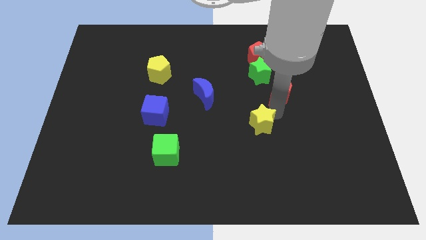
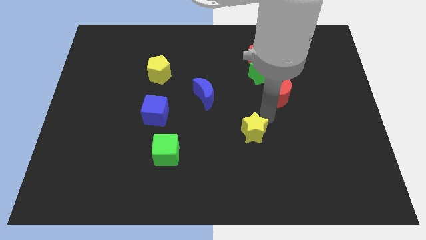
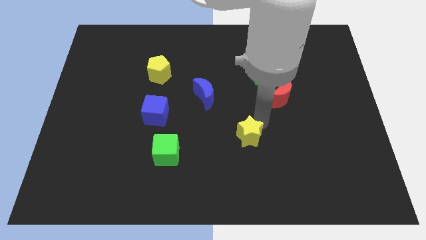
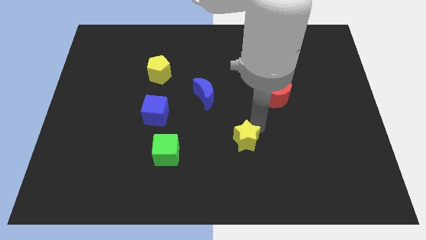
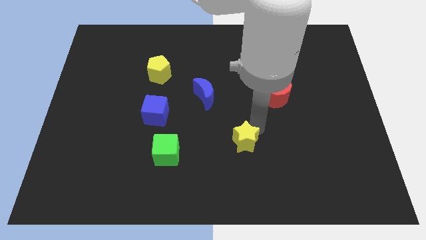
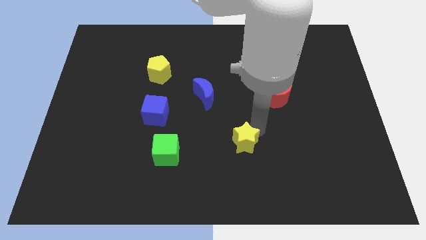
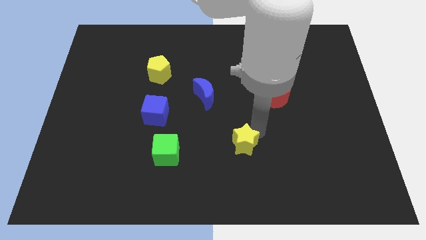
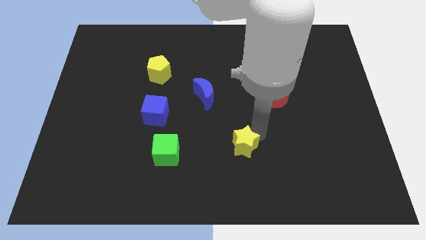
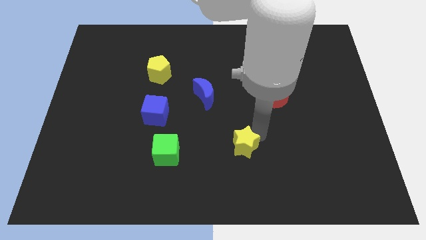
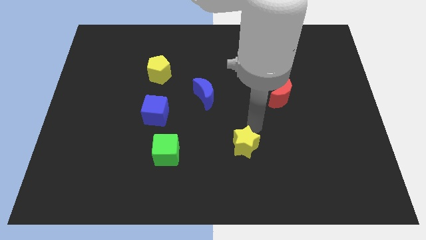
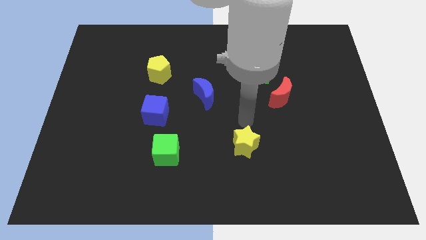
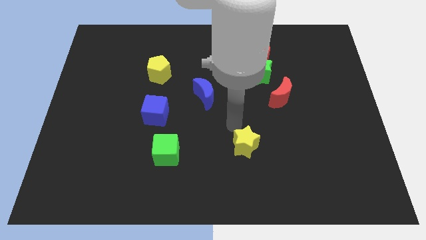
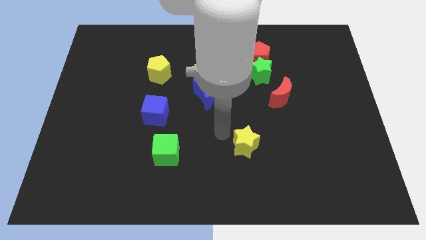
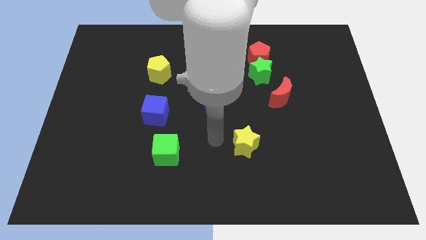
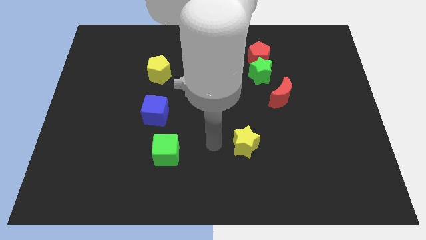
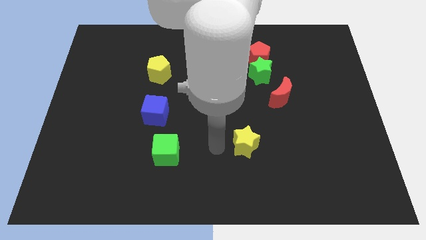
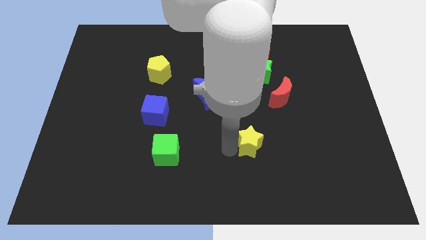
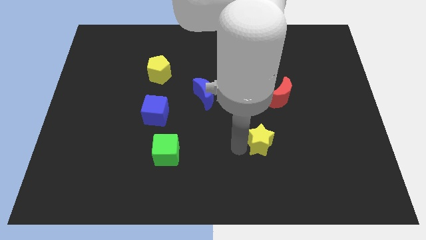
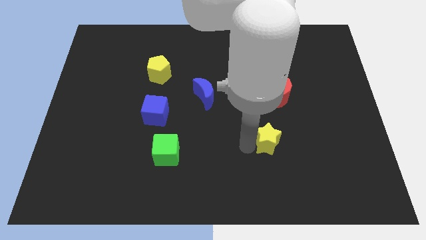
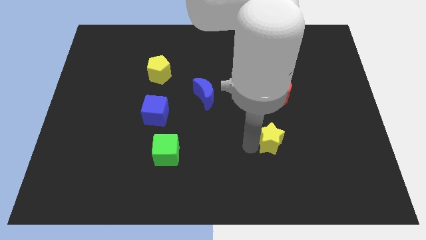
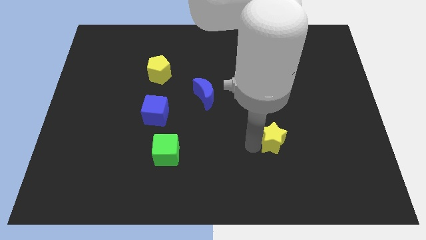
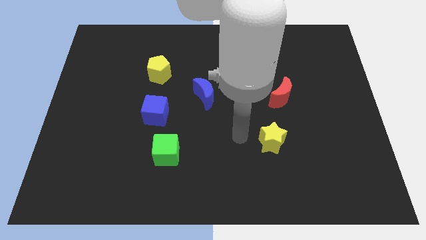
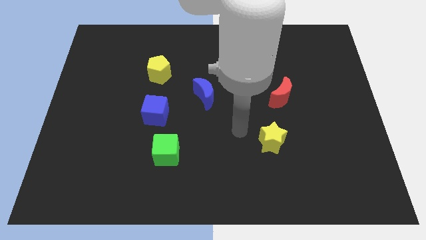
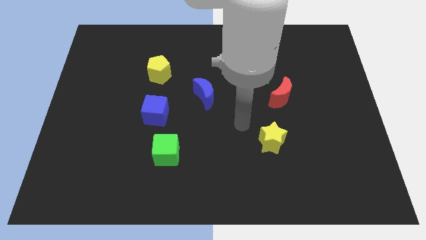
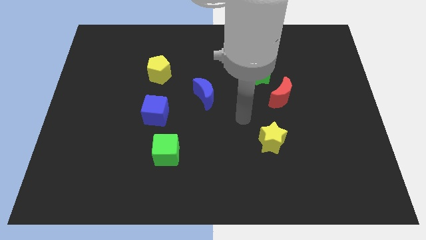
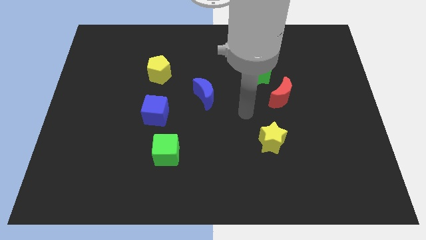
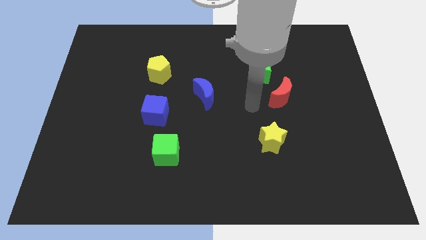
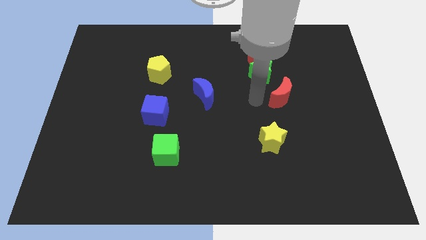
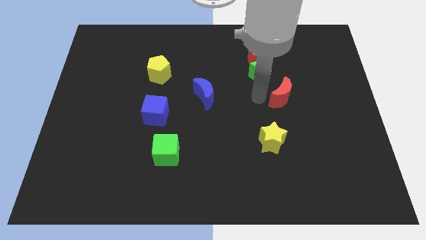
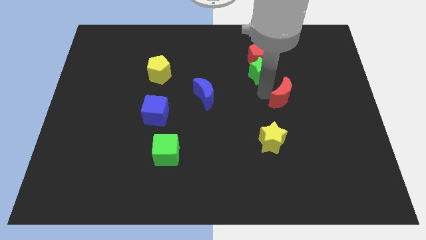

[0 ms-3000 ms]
move the yellow star vertically to the bottom of the red crescent

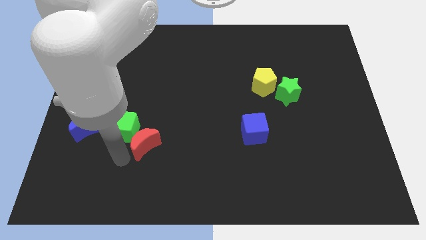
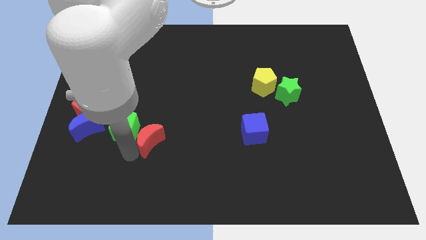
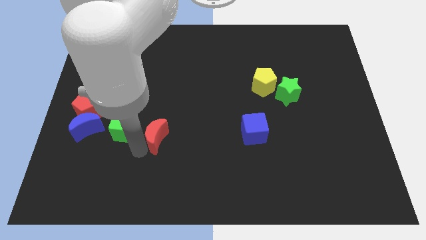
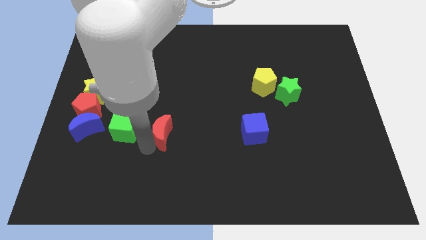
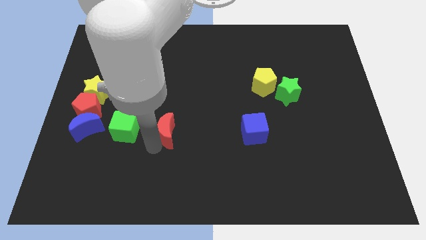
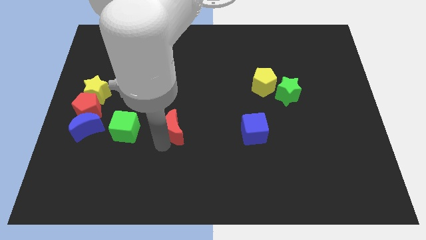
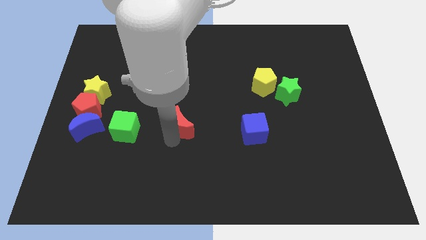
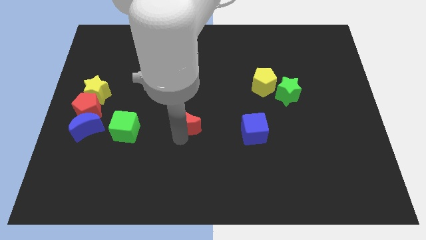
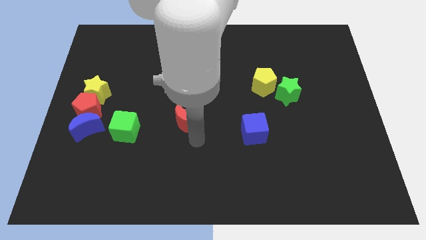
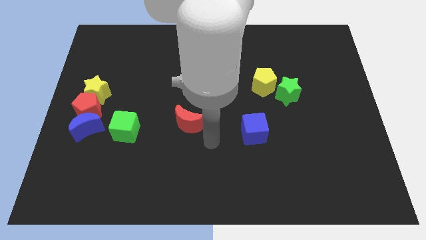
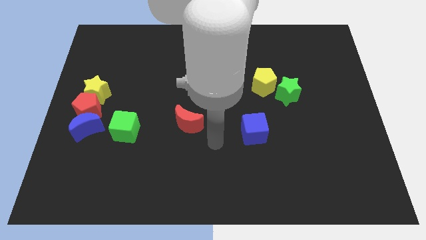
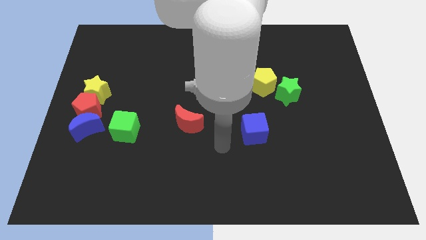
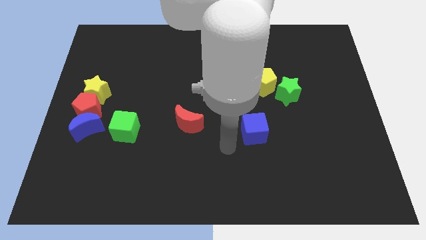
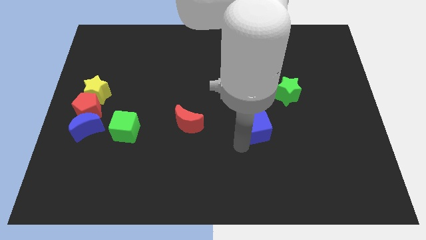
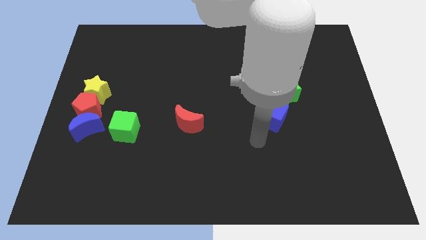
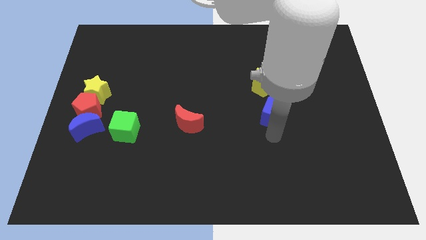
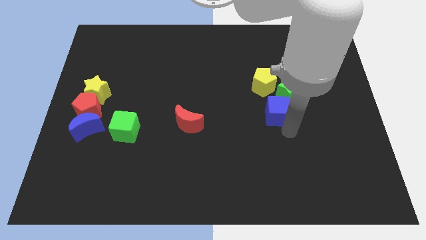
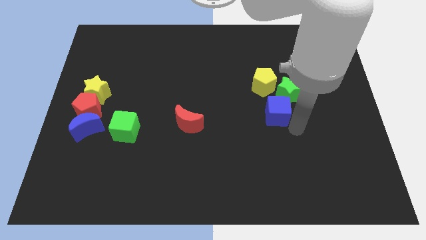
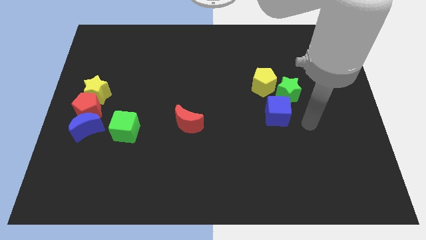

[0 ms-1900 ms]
move blue cube below yellow pentagon

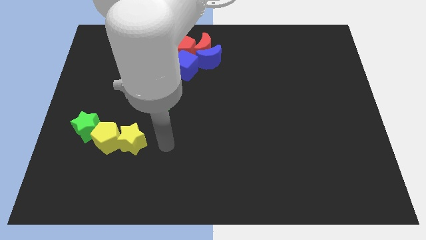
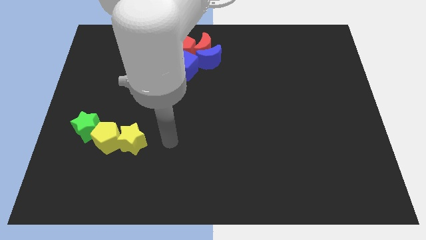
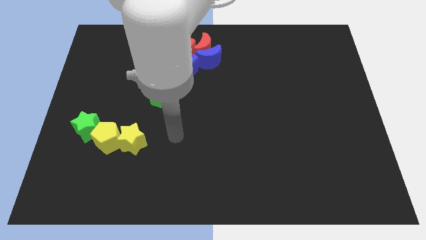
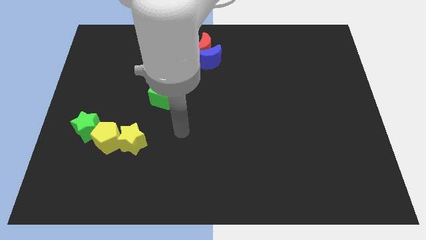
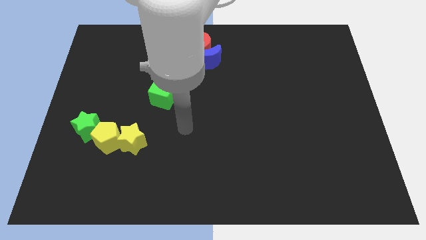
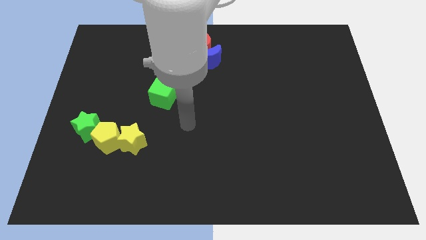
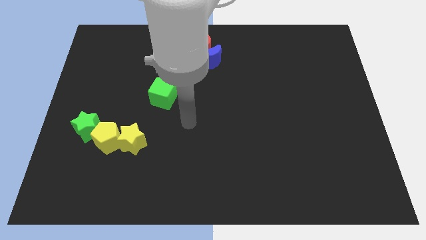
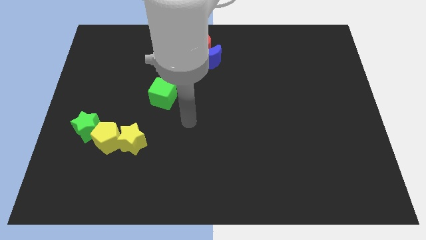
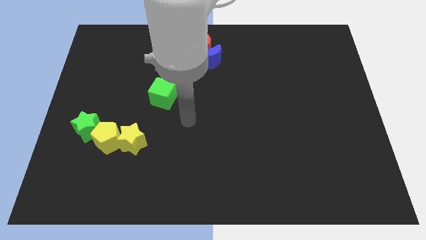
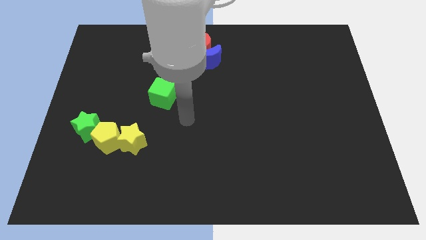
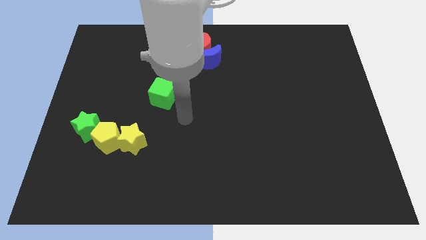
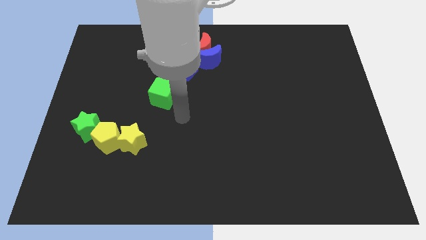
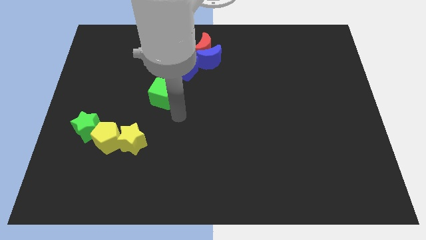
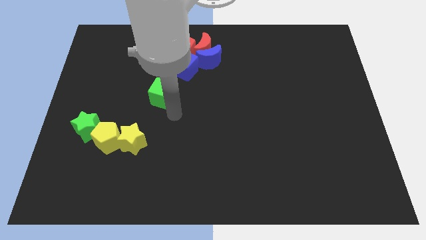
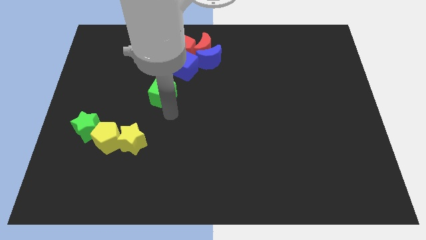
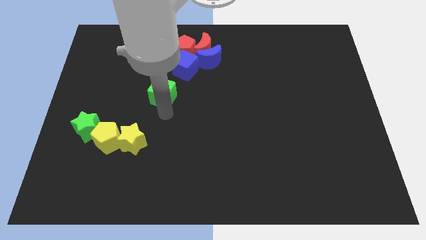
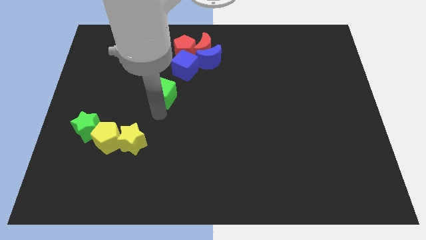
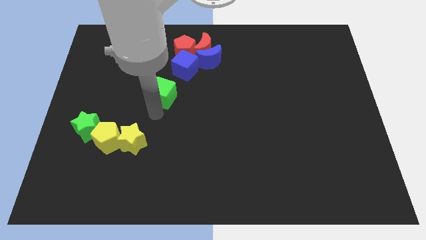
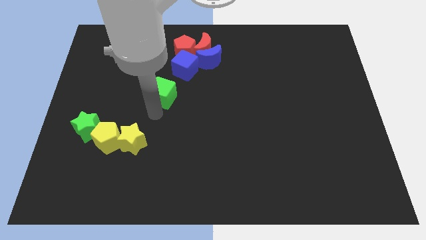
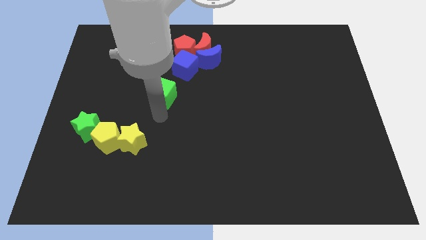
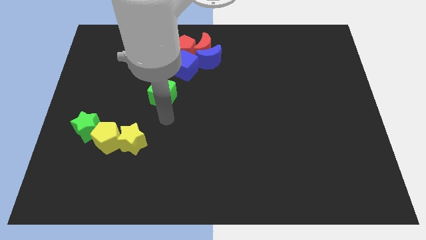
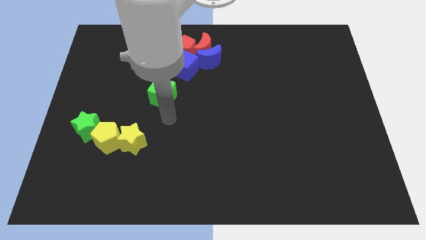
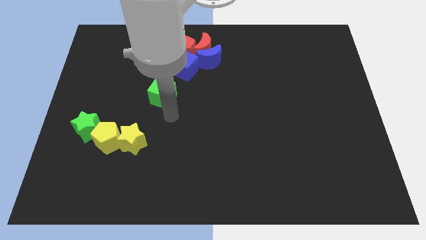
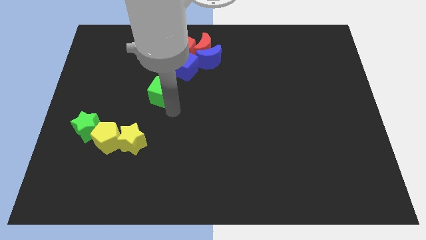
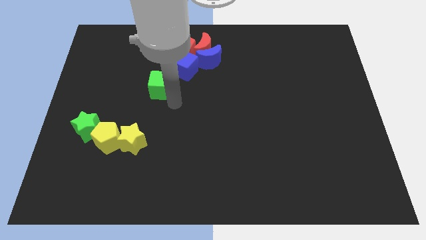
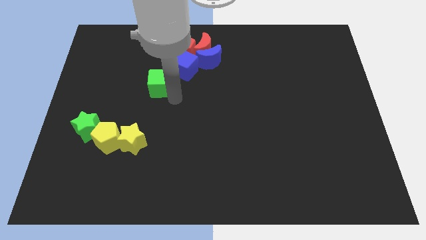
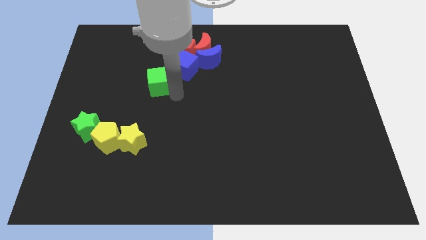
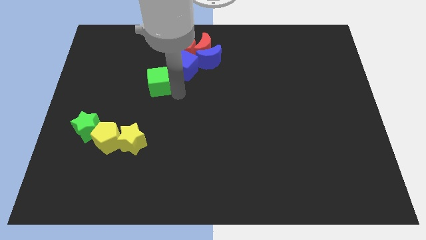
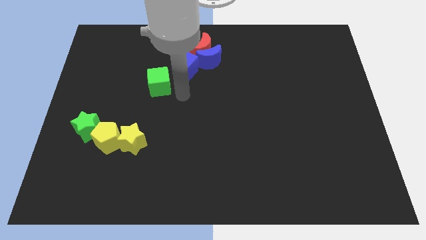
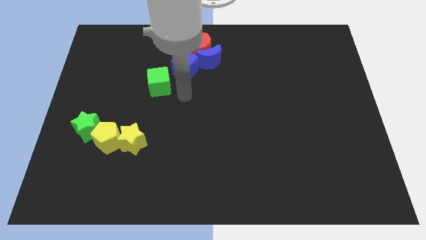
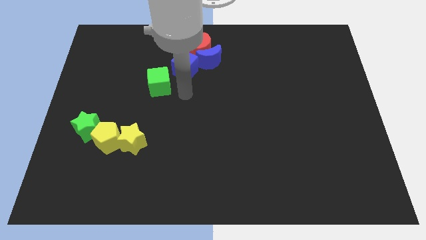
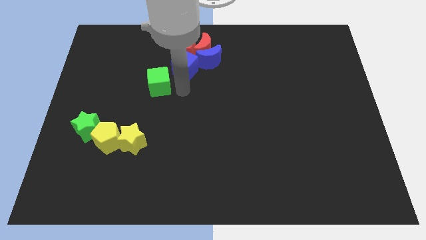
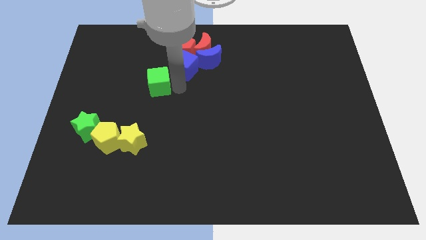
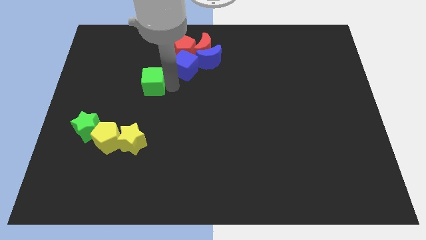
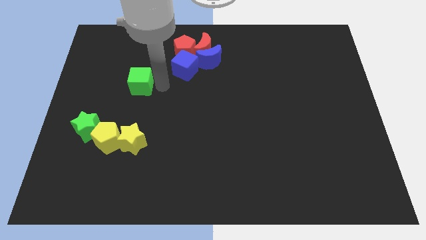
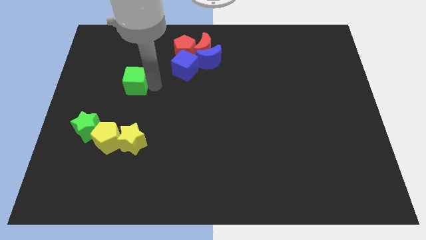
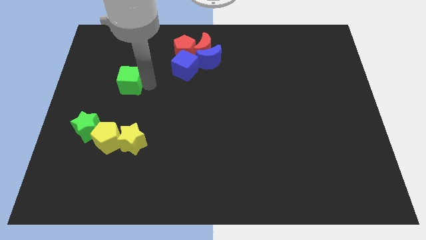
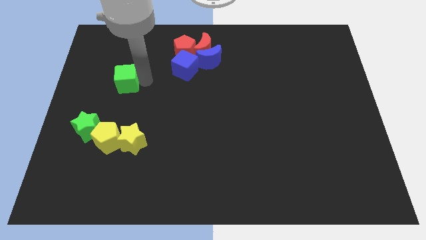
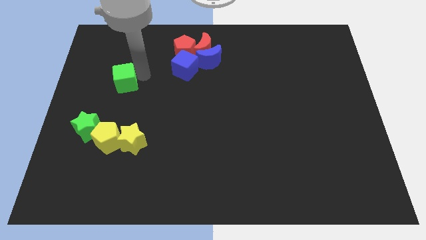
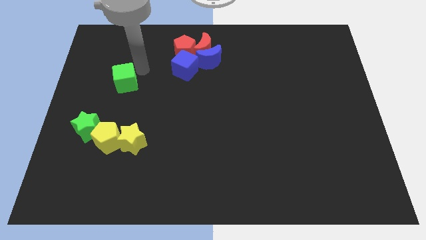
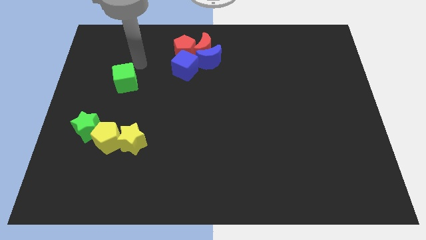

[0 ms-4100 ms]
place the green cube vertically above the yellow pentagon
